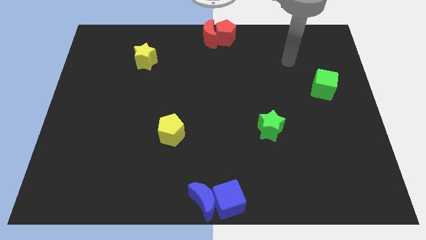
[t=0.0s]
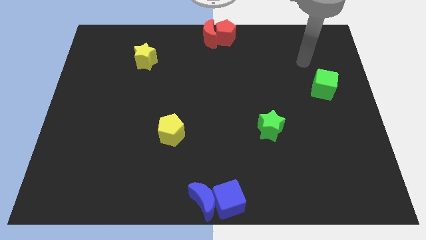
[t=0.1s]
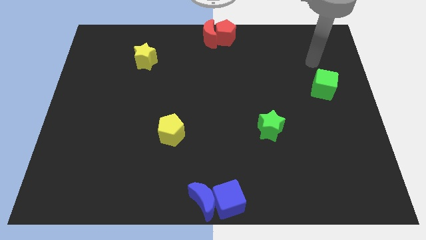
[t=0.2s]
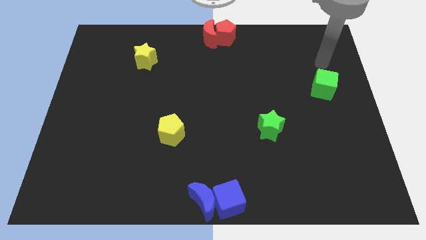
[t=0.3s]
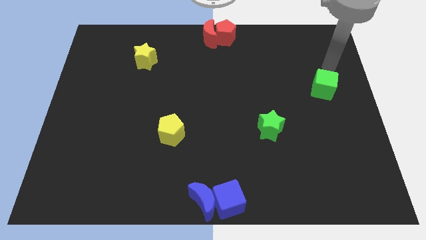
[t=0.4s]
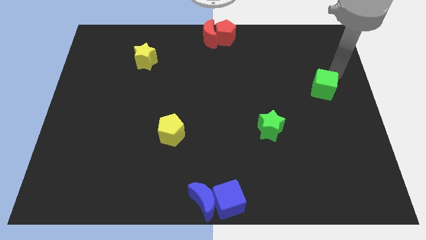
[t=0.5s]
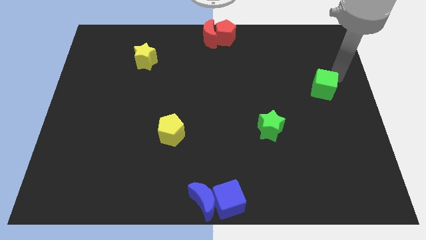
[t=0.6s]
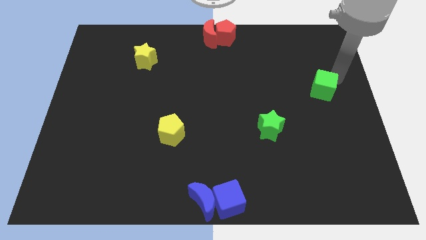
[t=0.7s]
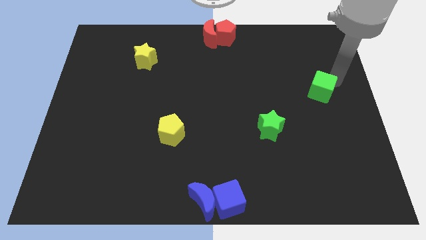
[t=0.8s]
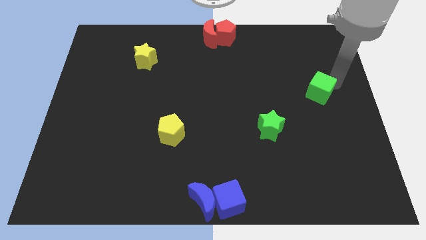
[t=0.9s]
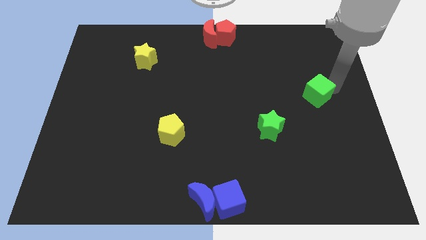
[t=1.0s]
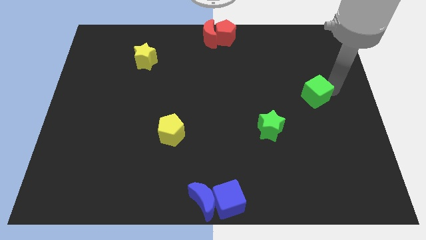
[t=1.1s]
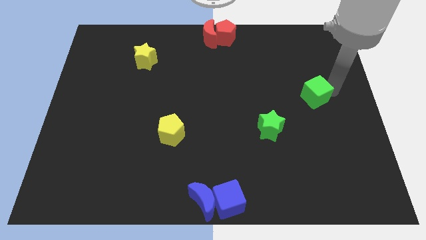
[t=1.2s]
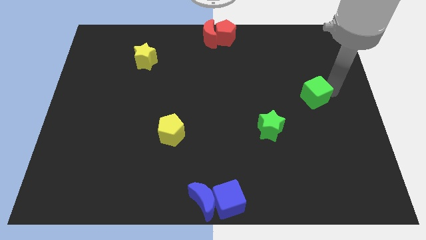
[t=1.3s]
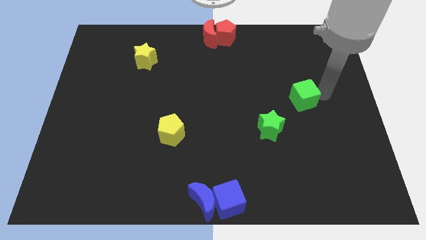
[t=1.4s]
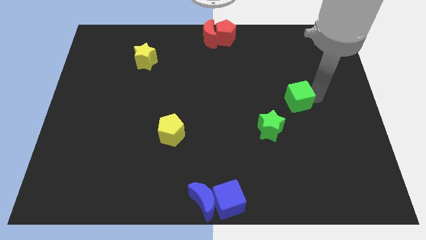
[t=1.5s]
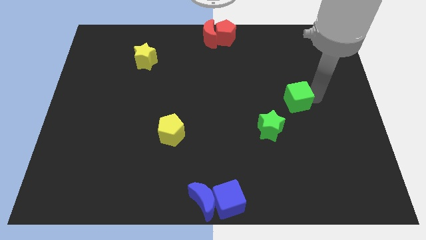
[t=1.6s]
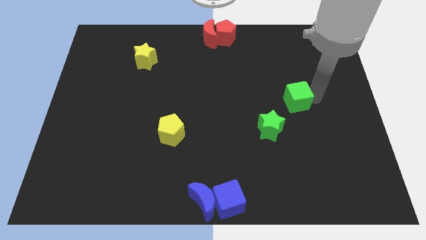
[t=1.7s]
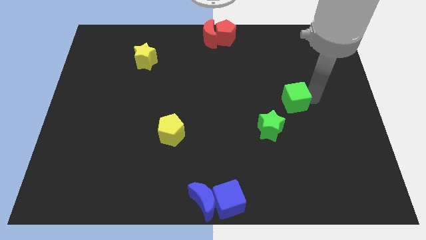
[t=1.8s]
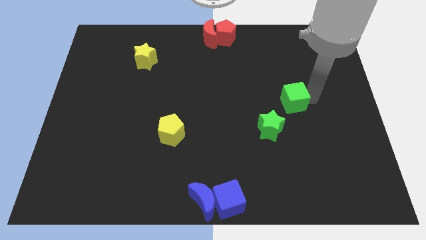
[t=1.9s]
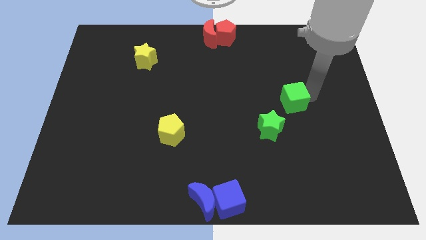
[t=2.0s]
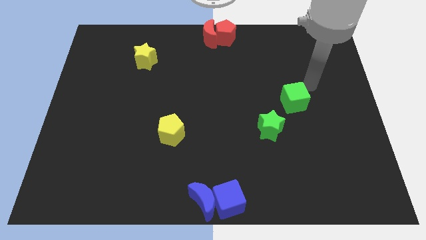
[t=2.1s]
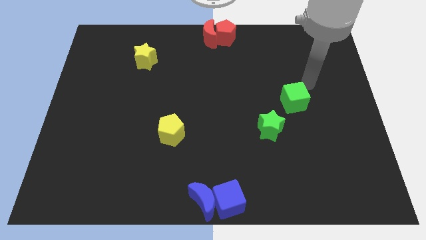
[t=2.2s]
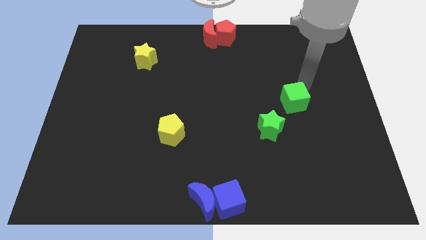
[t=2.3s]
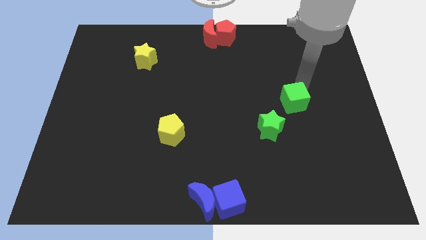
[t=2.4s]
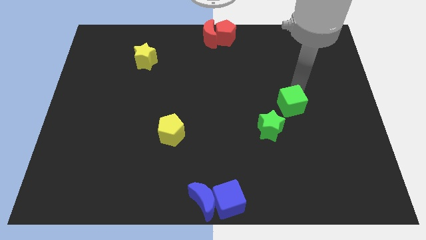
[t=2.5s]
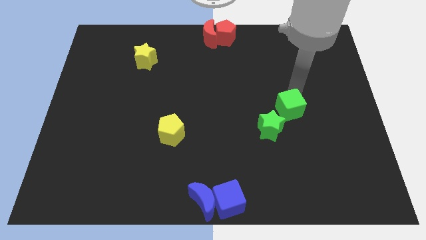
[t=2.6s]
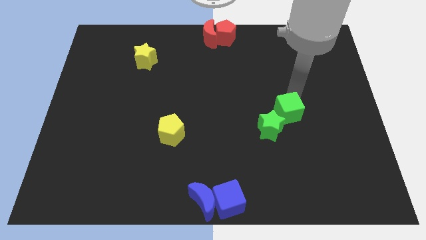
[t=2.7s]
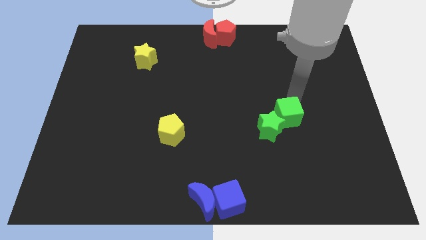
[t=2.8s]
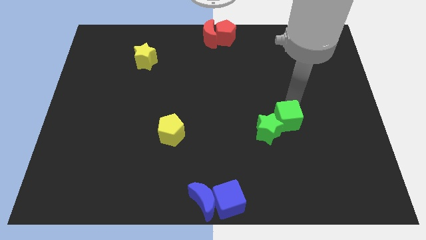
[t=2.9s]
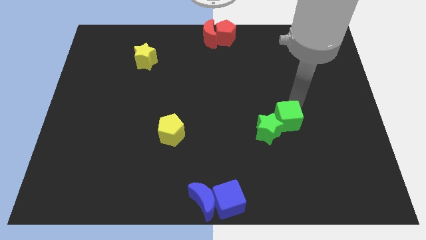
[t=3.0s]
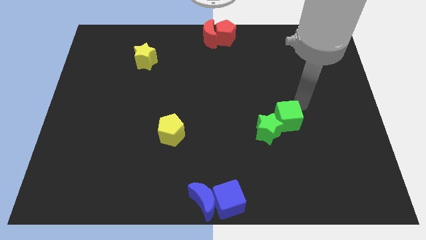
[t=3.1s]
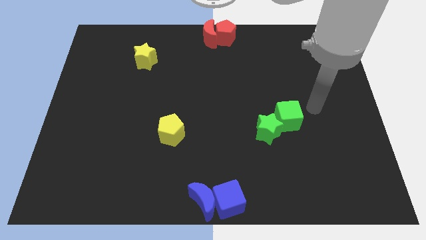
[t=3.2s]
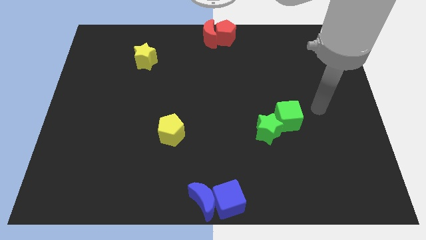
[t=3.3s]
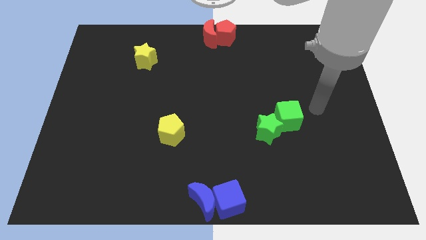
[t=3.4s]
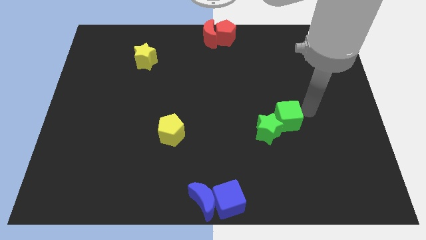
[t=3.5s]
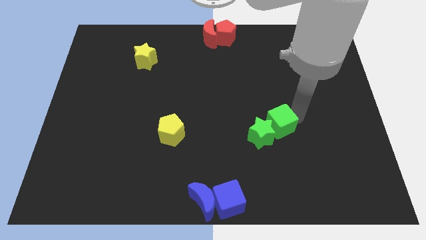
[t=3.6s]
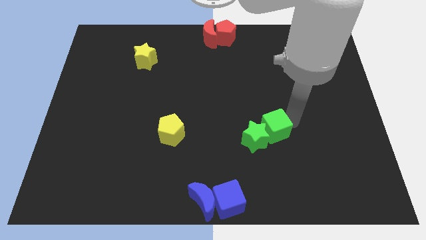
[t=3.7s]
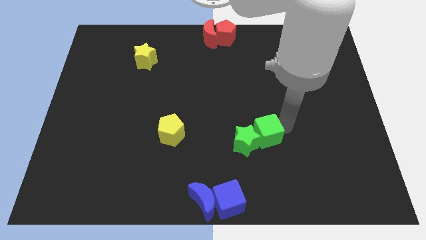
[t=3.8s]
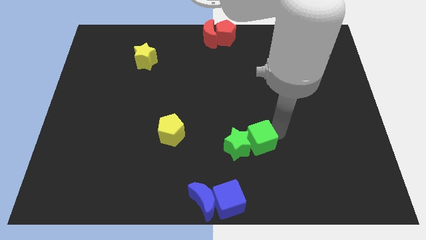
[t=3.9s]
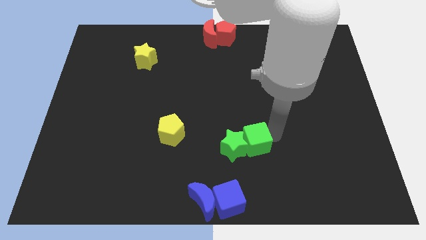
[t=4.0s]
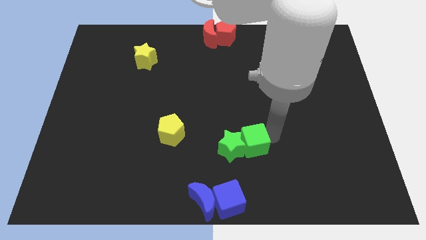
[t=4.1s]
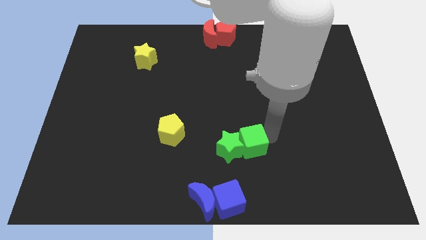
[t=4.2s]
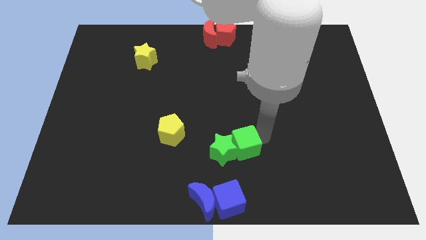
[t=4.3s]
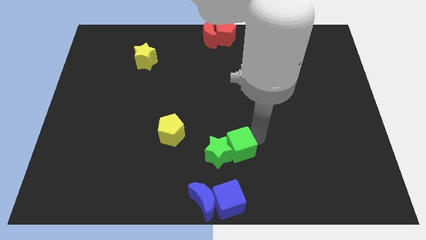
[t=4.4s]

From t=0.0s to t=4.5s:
move the green cube into the green star

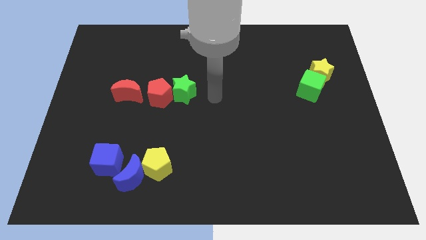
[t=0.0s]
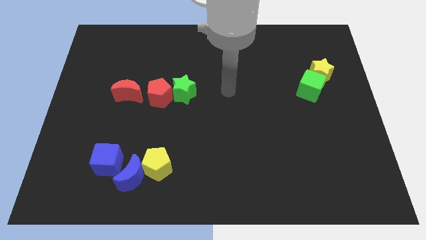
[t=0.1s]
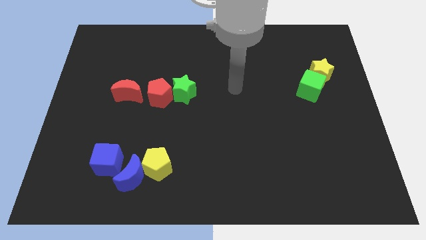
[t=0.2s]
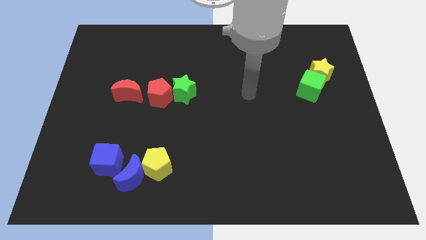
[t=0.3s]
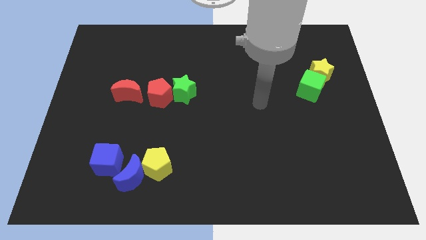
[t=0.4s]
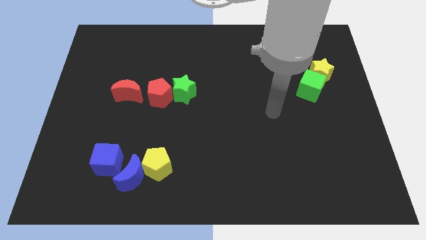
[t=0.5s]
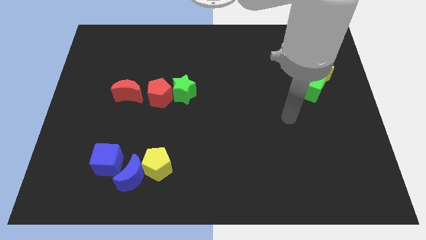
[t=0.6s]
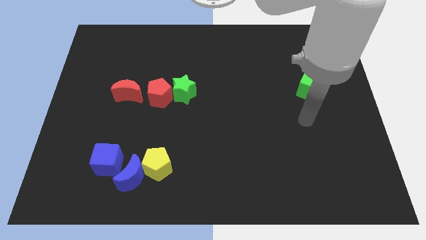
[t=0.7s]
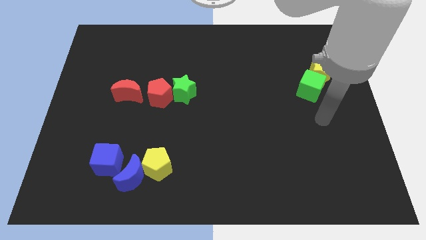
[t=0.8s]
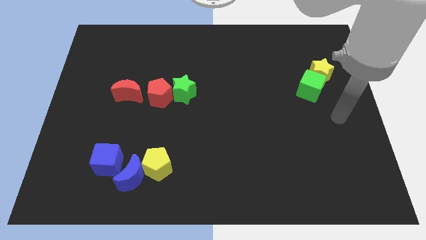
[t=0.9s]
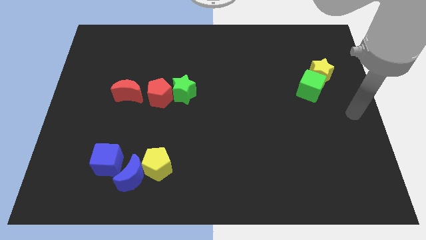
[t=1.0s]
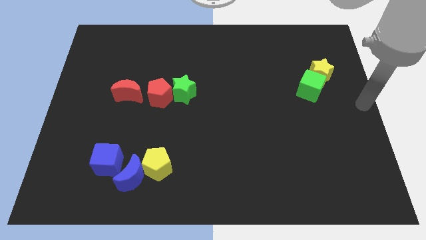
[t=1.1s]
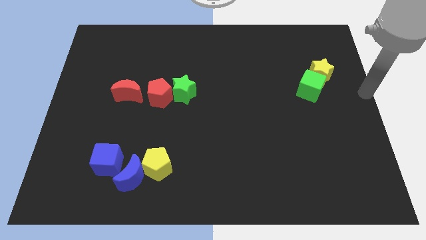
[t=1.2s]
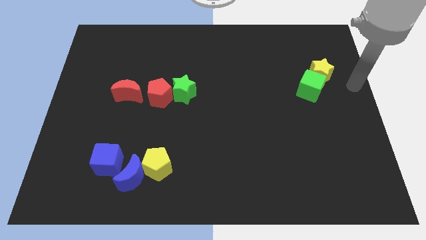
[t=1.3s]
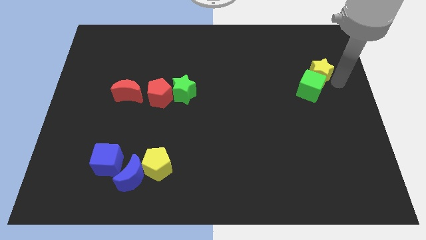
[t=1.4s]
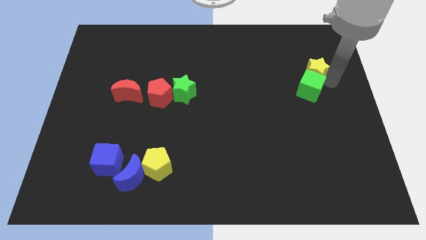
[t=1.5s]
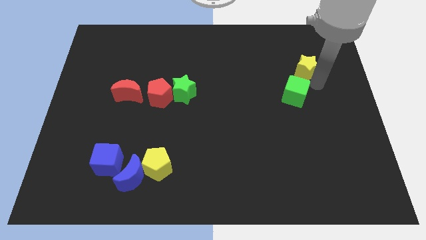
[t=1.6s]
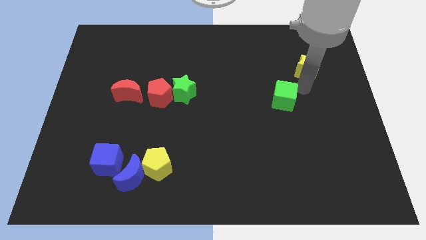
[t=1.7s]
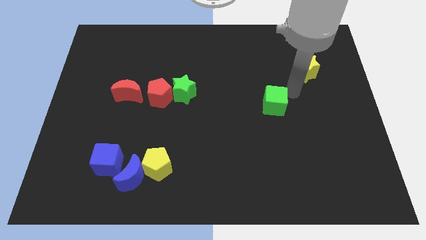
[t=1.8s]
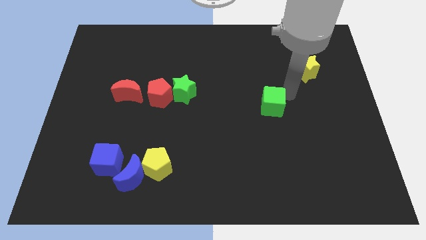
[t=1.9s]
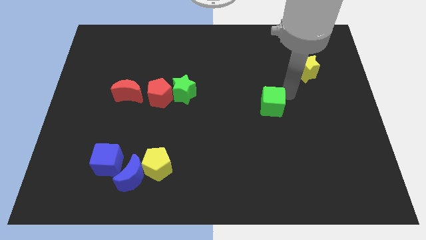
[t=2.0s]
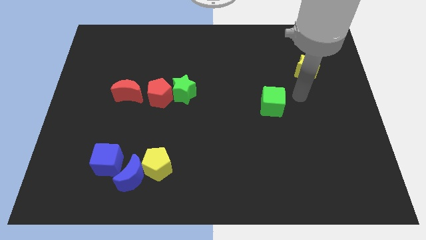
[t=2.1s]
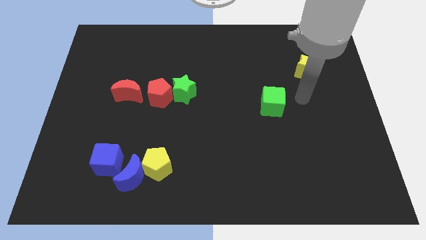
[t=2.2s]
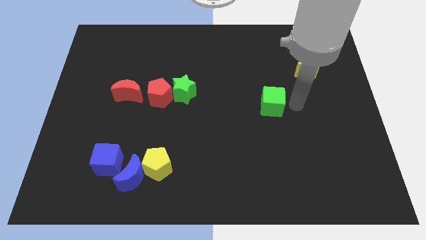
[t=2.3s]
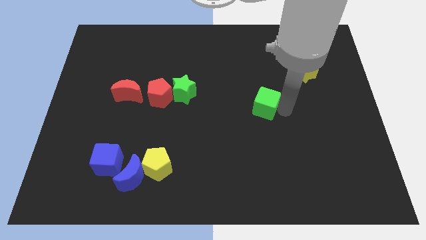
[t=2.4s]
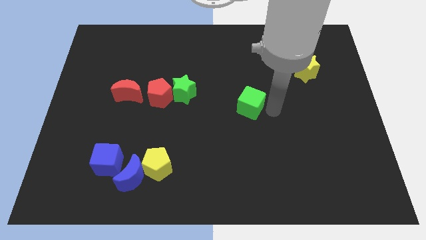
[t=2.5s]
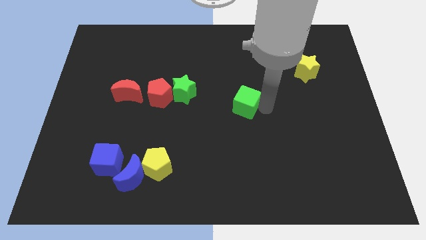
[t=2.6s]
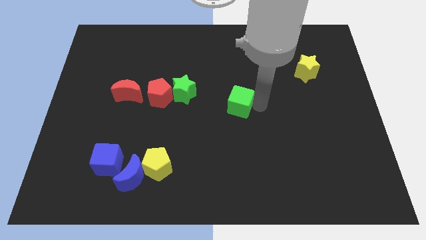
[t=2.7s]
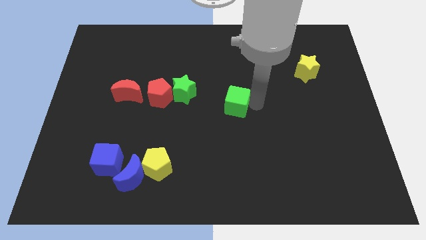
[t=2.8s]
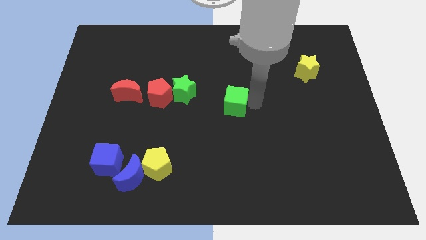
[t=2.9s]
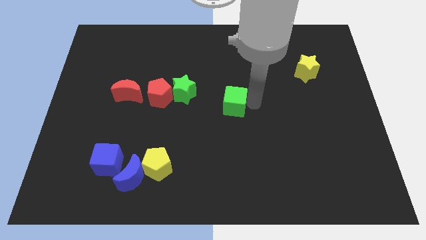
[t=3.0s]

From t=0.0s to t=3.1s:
separate green cube from yellow star

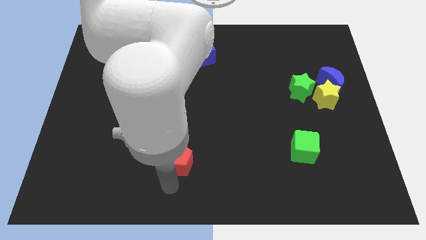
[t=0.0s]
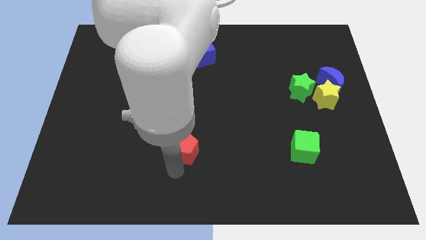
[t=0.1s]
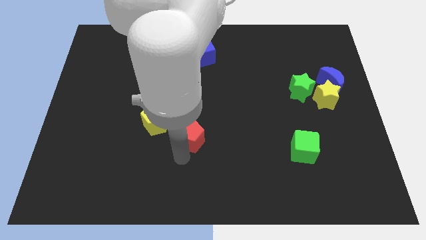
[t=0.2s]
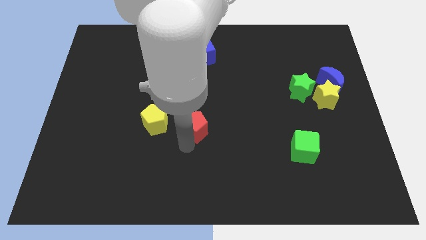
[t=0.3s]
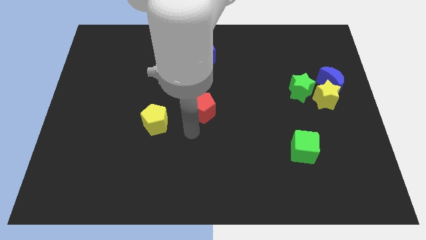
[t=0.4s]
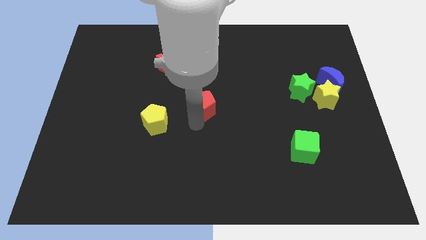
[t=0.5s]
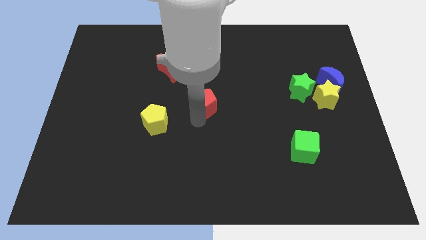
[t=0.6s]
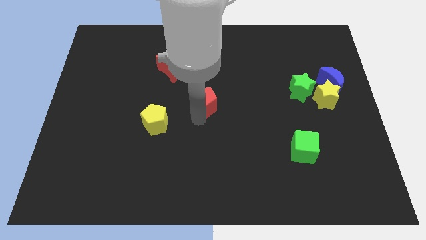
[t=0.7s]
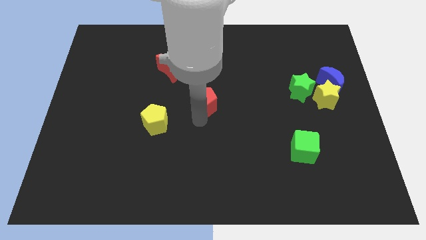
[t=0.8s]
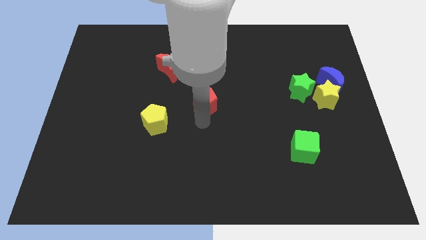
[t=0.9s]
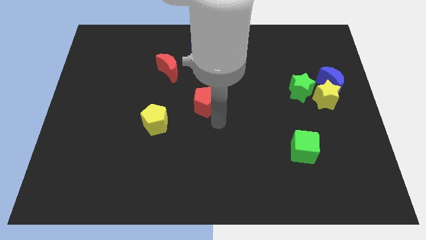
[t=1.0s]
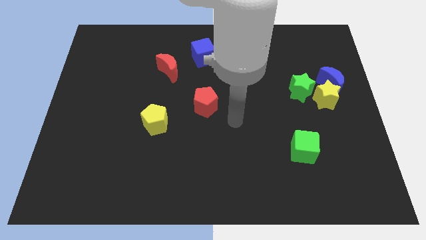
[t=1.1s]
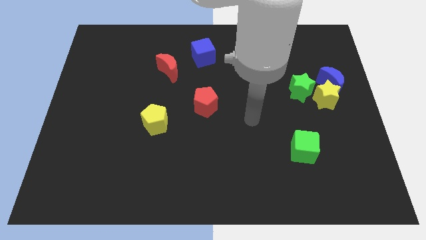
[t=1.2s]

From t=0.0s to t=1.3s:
push the red pentagon slightly towards up
